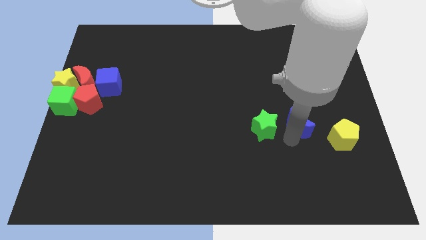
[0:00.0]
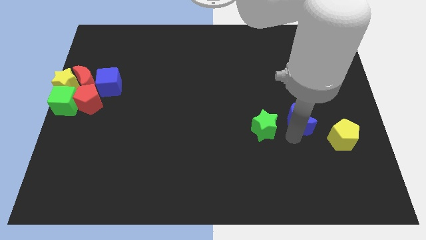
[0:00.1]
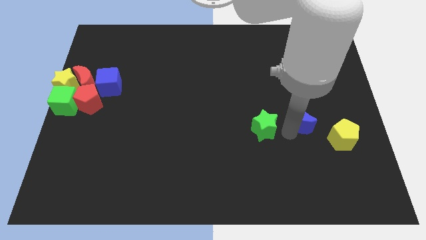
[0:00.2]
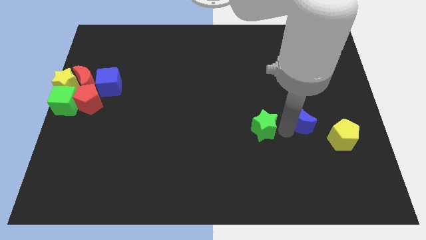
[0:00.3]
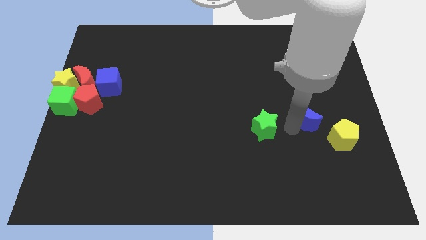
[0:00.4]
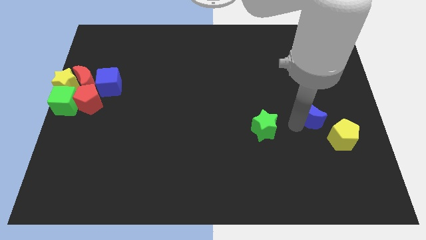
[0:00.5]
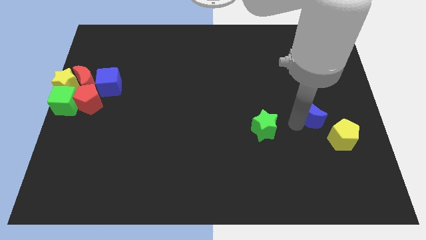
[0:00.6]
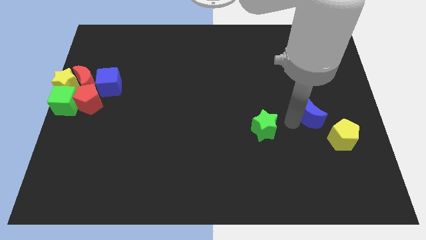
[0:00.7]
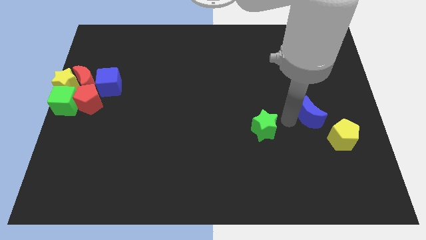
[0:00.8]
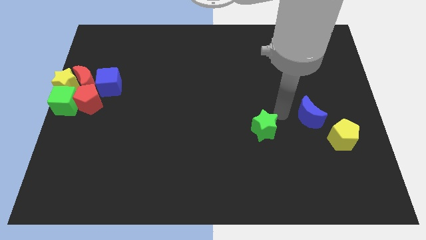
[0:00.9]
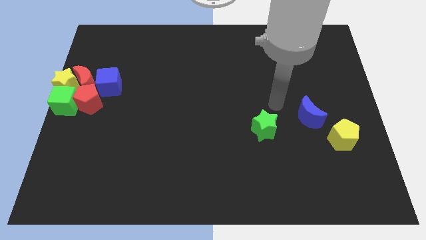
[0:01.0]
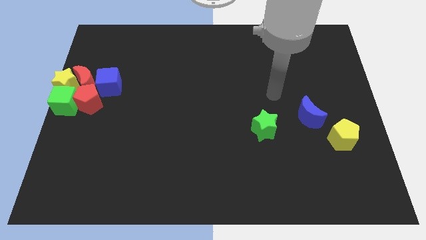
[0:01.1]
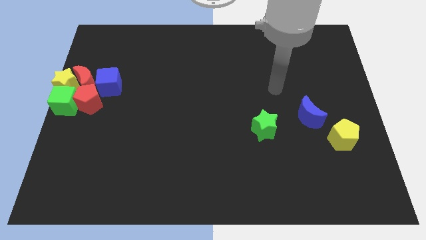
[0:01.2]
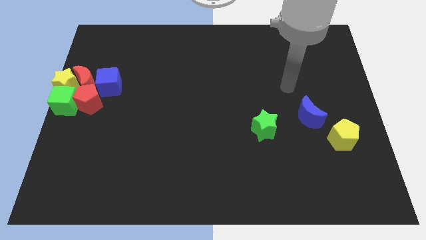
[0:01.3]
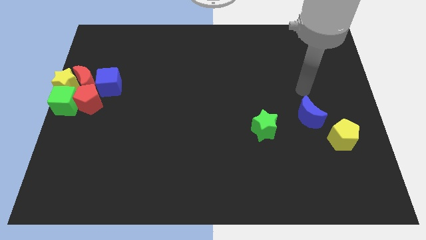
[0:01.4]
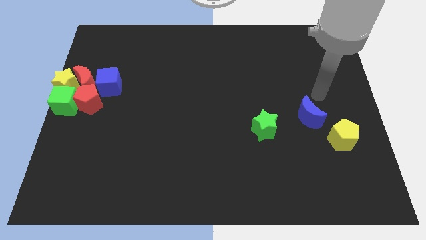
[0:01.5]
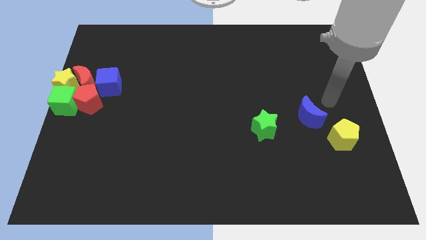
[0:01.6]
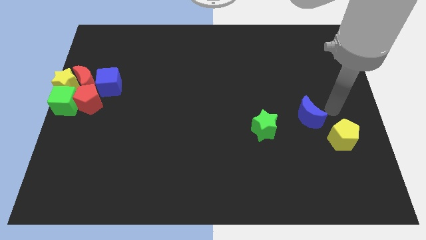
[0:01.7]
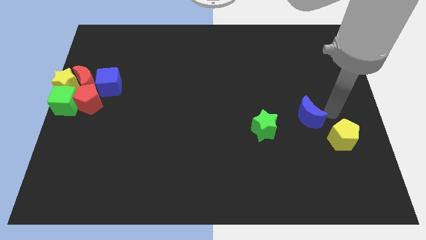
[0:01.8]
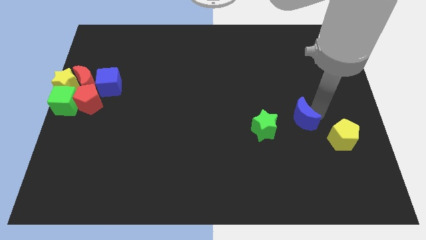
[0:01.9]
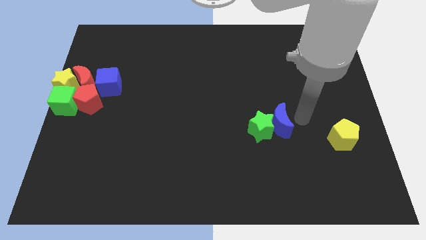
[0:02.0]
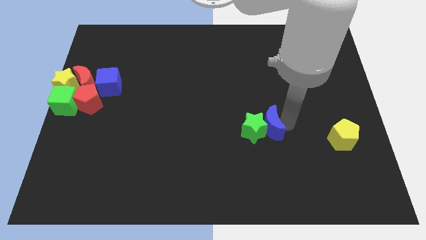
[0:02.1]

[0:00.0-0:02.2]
move the blue crescent to the right of the green star

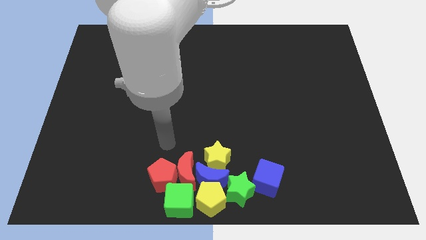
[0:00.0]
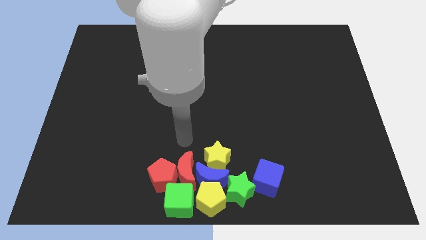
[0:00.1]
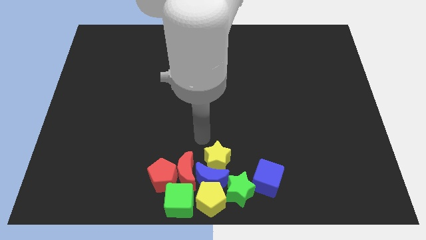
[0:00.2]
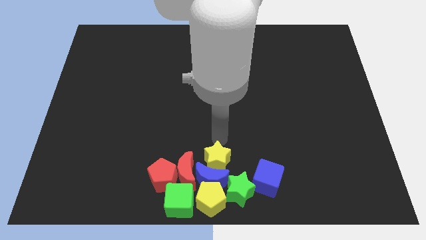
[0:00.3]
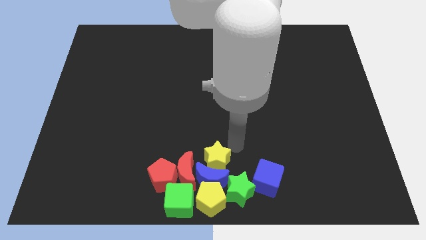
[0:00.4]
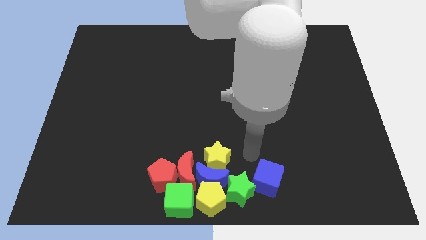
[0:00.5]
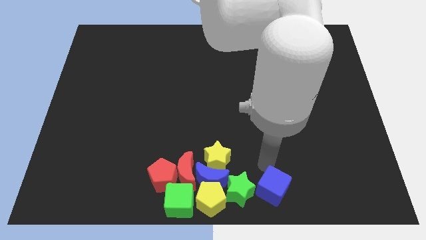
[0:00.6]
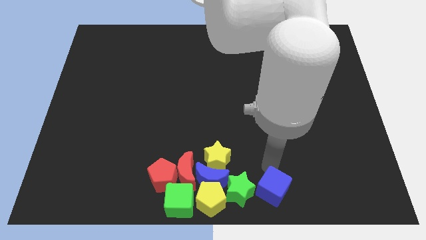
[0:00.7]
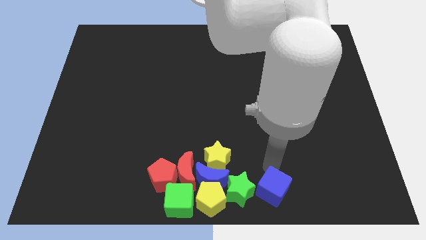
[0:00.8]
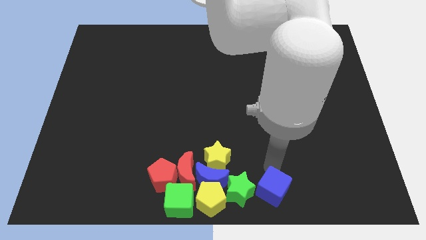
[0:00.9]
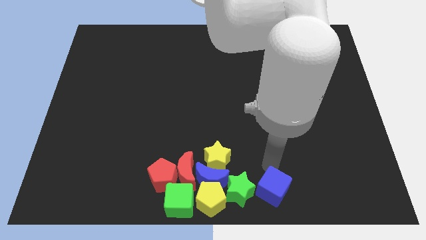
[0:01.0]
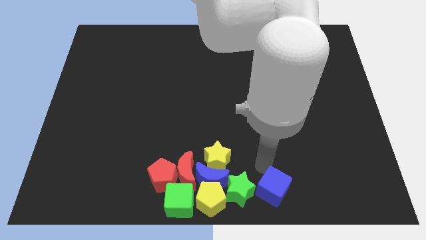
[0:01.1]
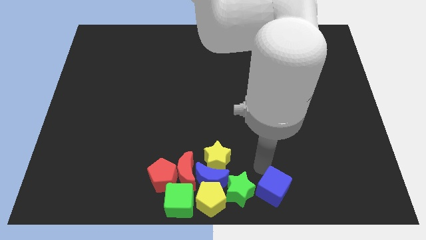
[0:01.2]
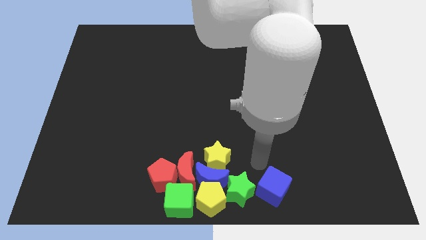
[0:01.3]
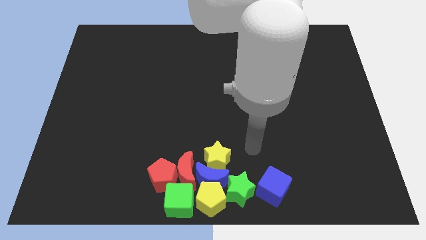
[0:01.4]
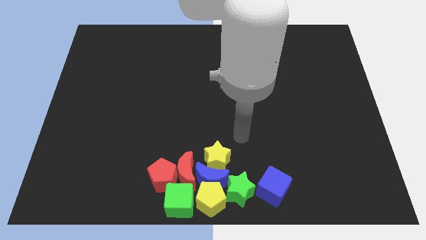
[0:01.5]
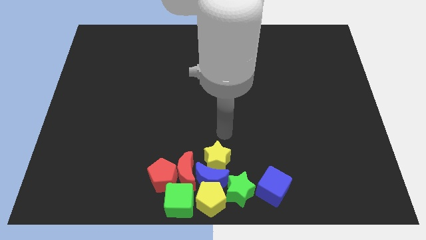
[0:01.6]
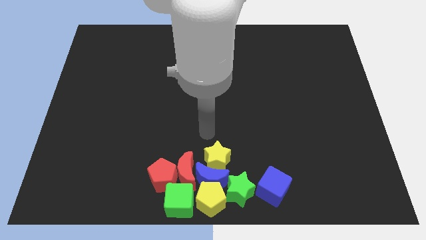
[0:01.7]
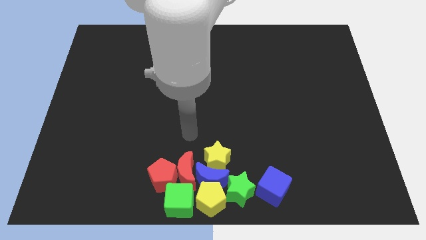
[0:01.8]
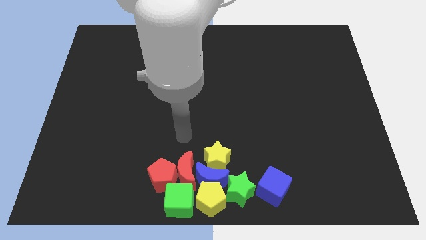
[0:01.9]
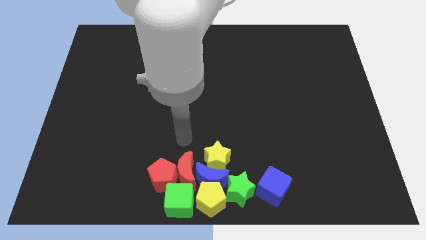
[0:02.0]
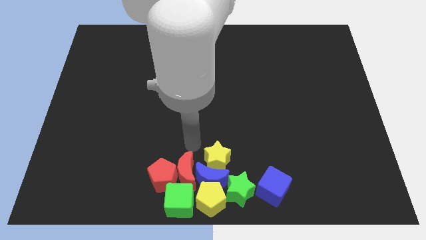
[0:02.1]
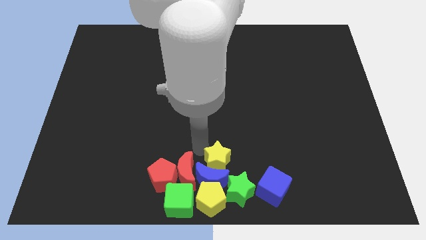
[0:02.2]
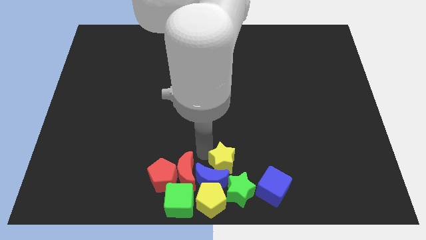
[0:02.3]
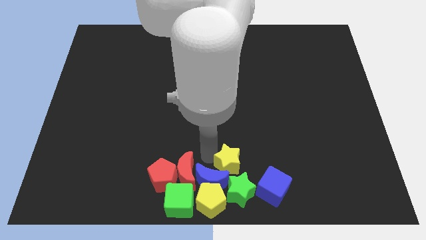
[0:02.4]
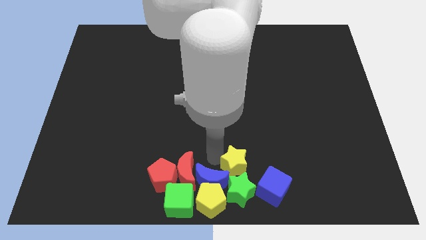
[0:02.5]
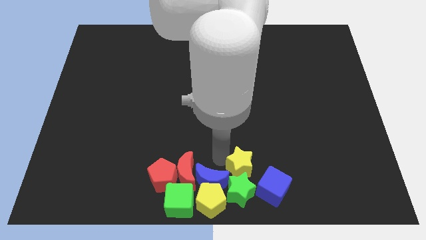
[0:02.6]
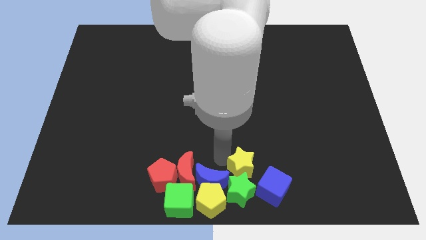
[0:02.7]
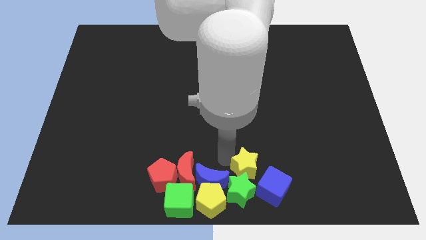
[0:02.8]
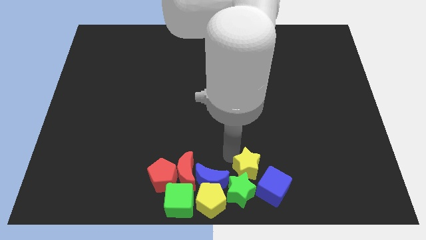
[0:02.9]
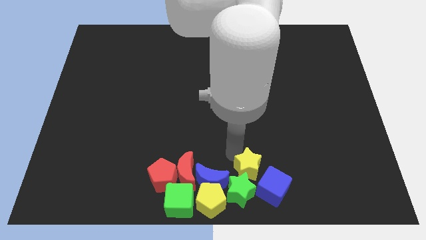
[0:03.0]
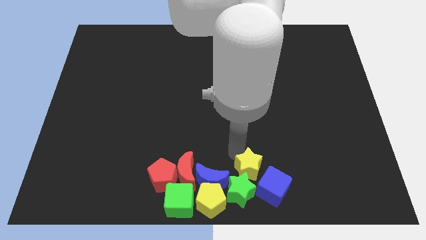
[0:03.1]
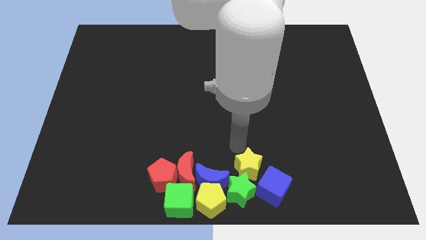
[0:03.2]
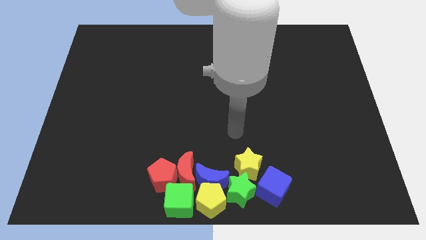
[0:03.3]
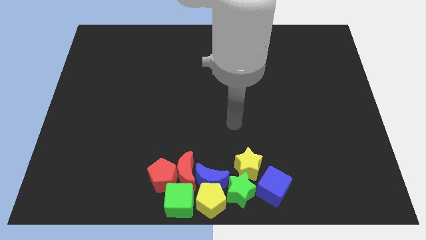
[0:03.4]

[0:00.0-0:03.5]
push the yellow star above the green star

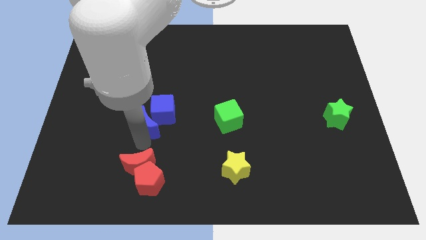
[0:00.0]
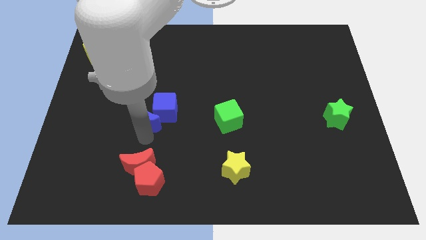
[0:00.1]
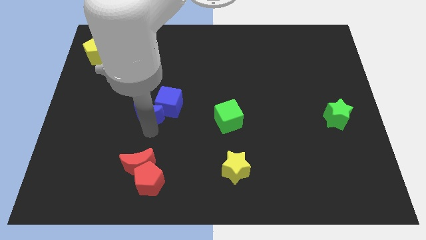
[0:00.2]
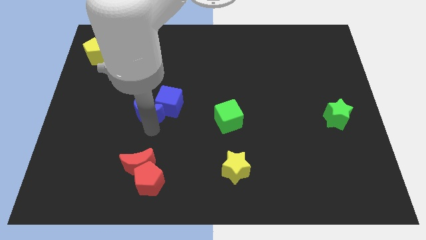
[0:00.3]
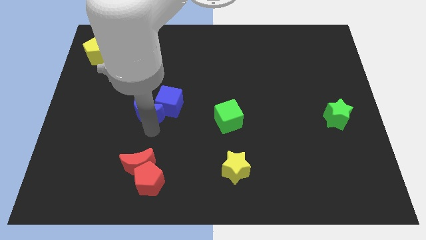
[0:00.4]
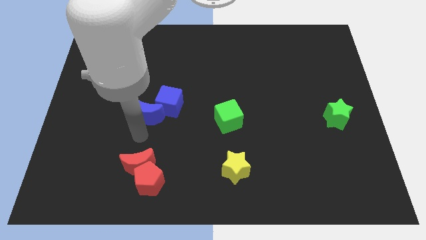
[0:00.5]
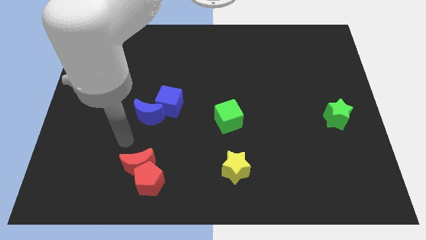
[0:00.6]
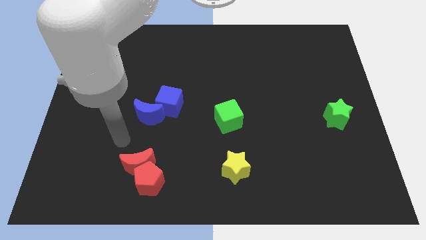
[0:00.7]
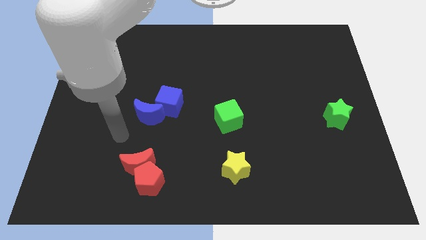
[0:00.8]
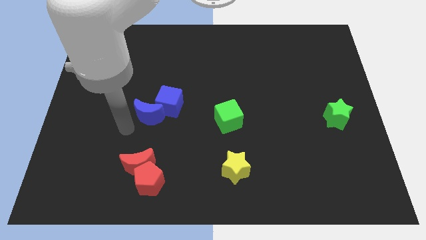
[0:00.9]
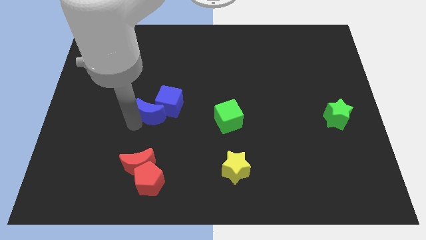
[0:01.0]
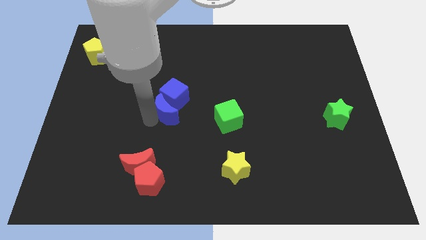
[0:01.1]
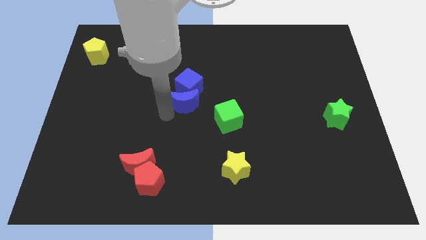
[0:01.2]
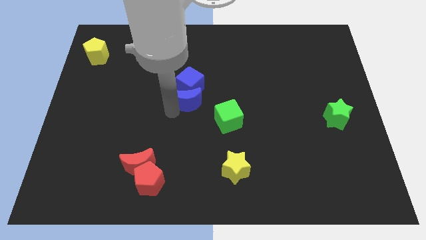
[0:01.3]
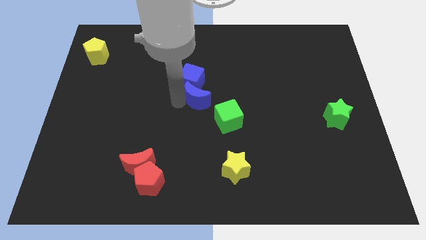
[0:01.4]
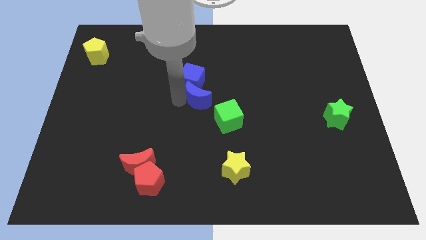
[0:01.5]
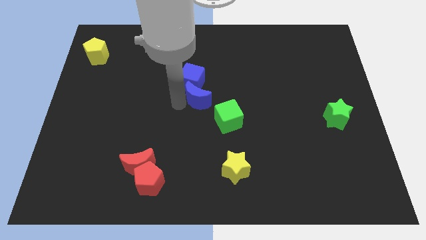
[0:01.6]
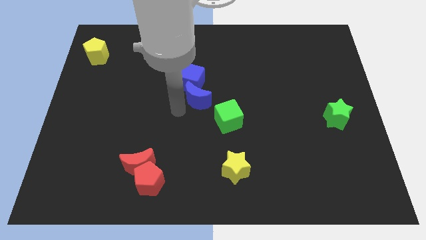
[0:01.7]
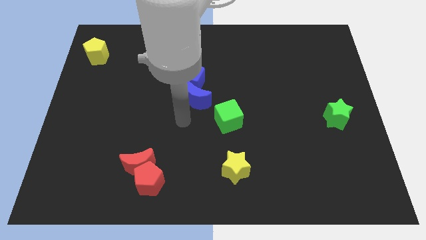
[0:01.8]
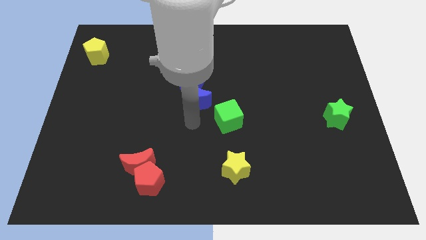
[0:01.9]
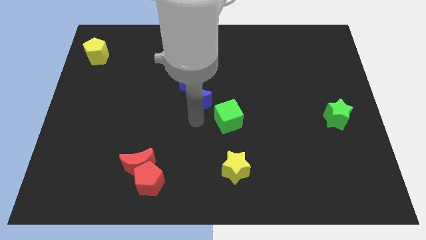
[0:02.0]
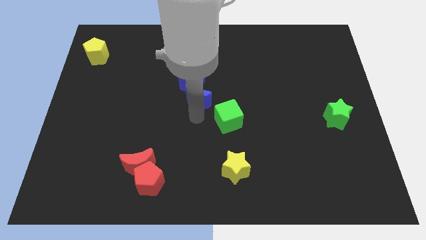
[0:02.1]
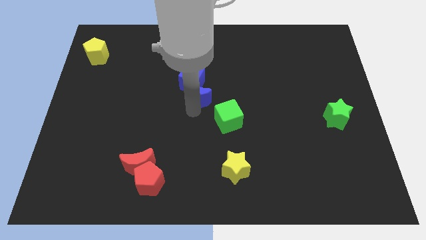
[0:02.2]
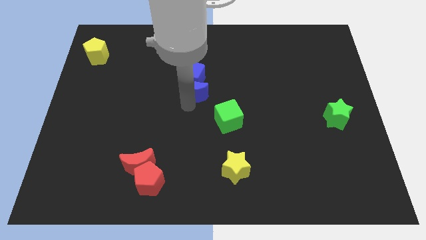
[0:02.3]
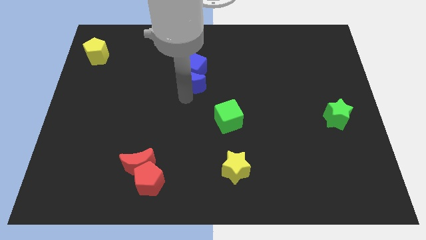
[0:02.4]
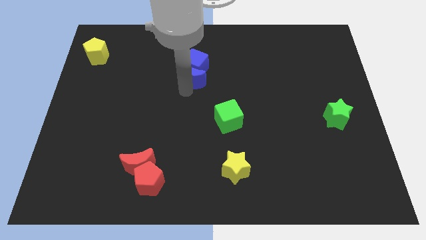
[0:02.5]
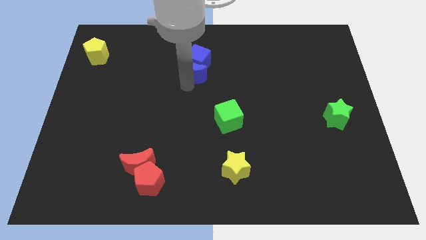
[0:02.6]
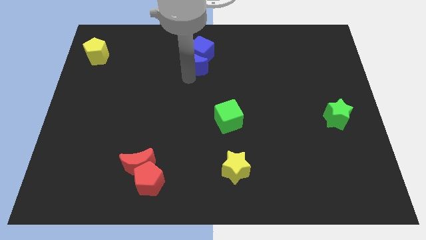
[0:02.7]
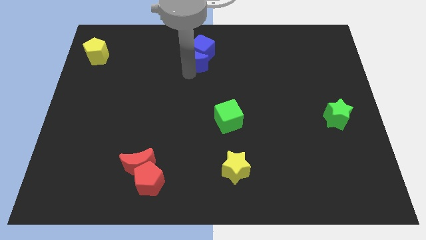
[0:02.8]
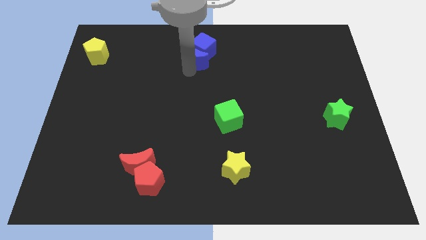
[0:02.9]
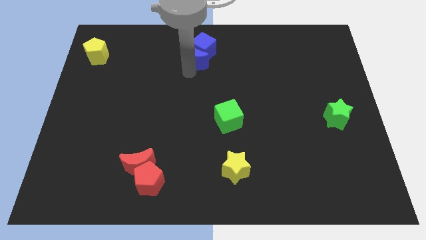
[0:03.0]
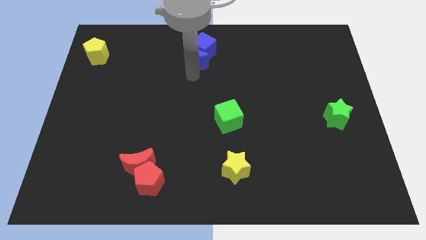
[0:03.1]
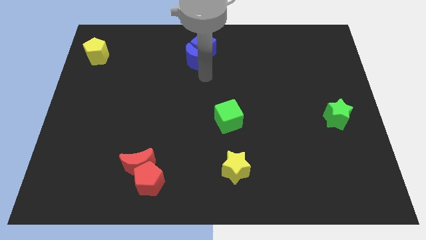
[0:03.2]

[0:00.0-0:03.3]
move the blue blocks to top left center of the board
